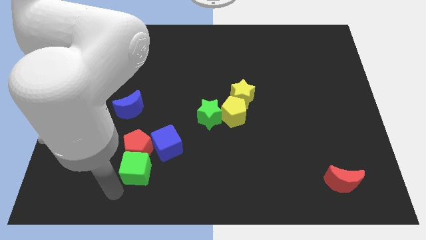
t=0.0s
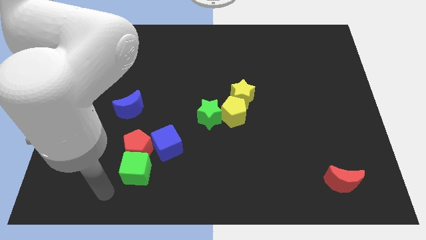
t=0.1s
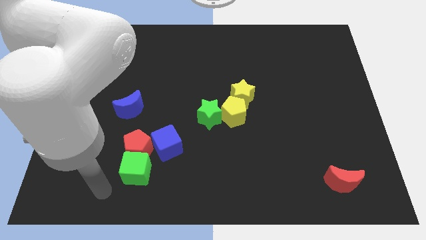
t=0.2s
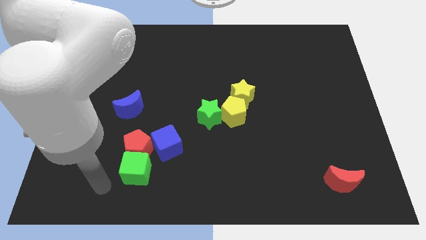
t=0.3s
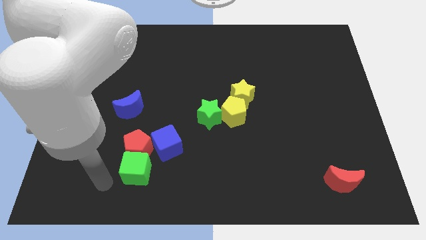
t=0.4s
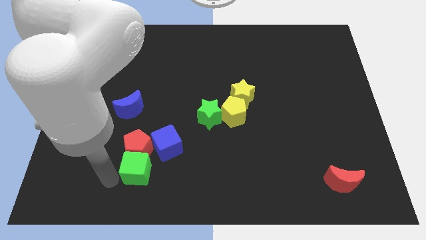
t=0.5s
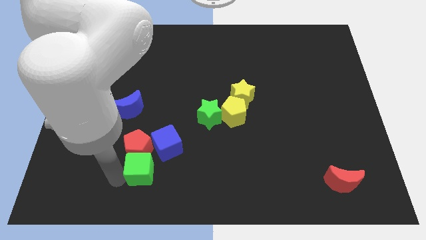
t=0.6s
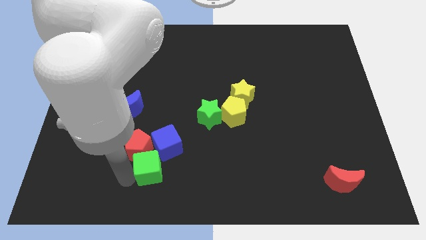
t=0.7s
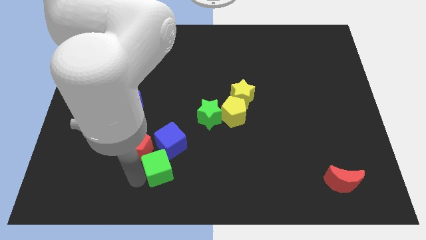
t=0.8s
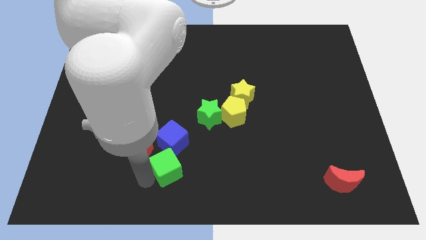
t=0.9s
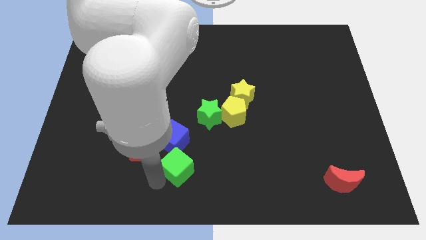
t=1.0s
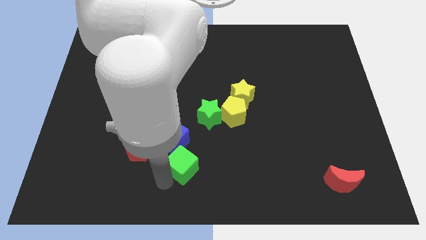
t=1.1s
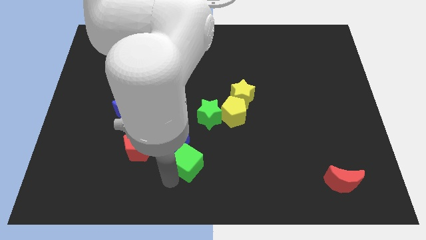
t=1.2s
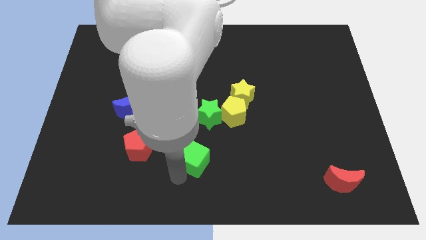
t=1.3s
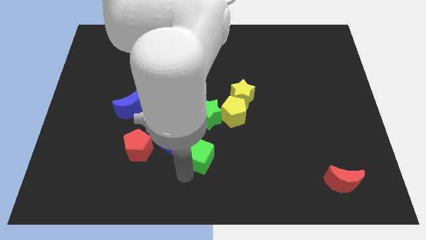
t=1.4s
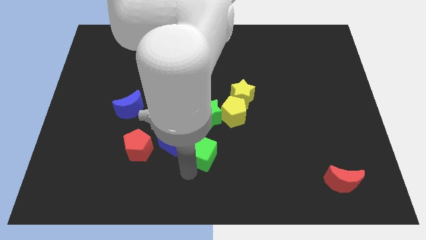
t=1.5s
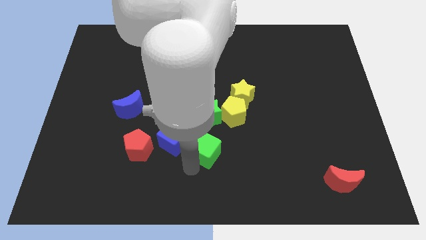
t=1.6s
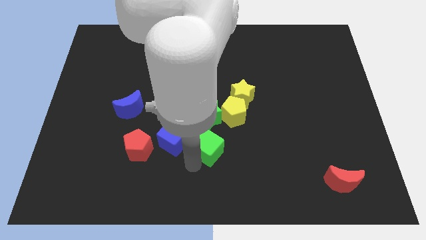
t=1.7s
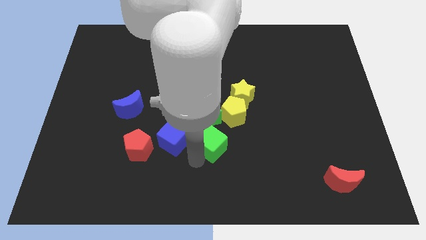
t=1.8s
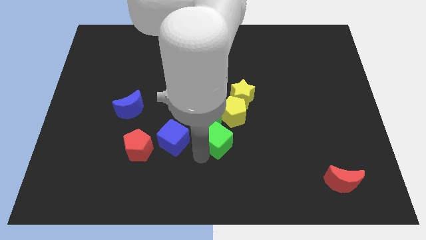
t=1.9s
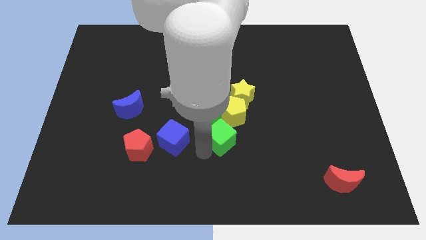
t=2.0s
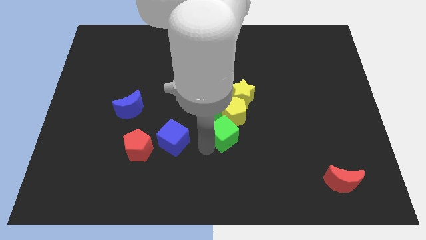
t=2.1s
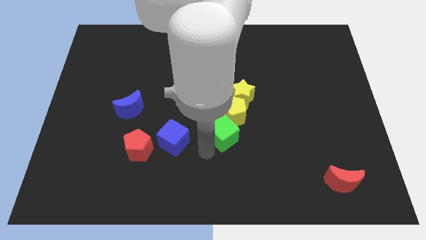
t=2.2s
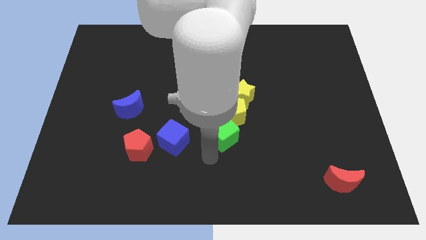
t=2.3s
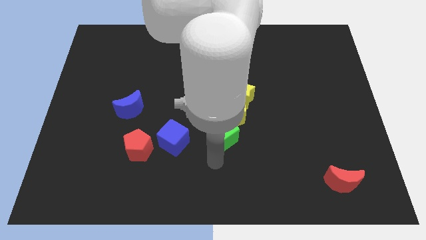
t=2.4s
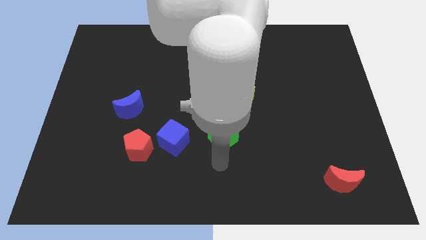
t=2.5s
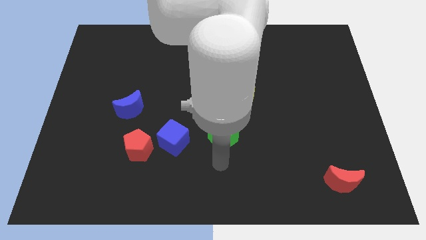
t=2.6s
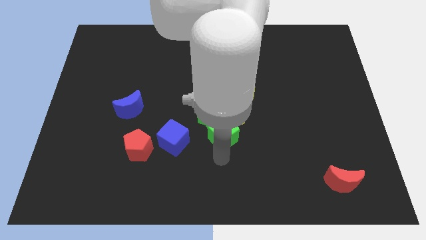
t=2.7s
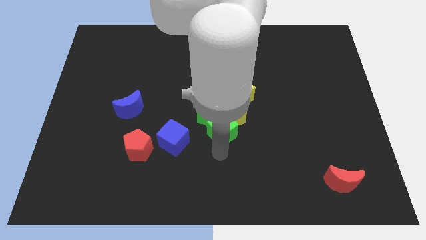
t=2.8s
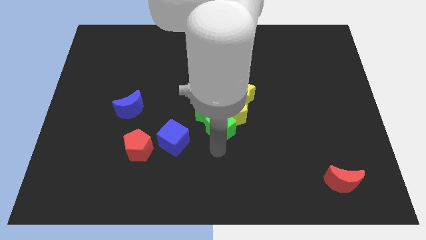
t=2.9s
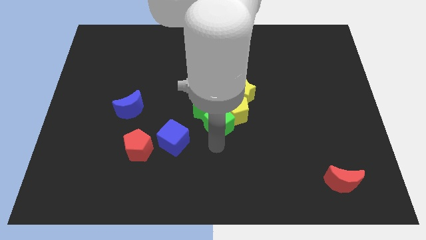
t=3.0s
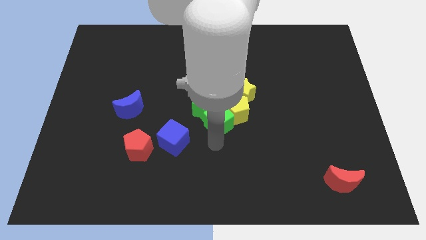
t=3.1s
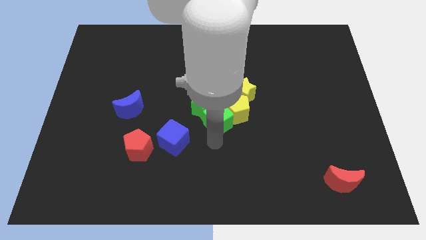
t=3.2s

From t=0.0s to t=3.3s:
separate the green cube from the red pentagon

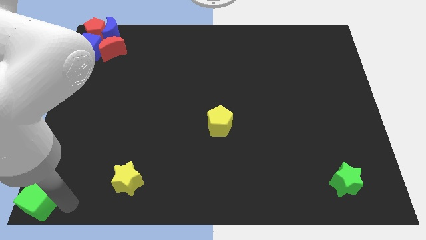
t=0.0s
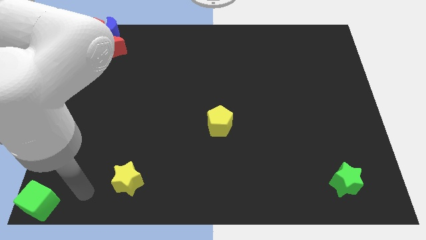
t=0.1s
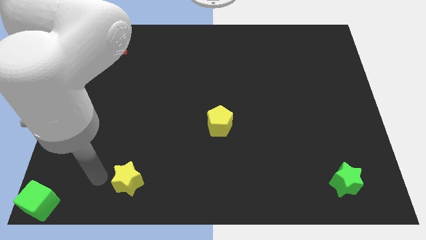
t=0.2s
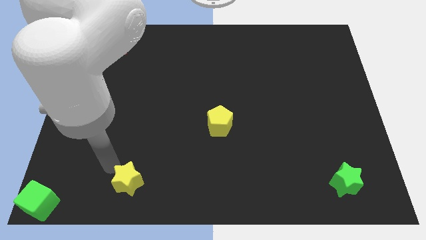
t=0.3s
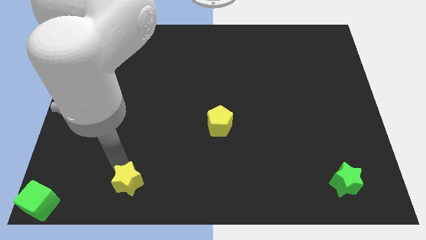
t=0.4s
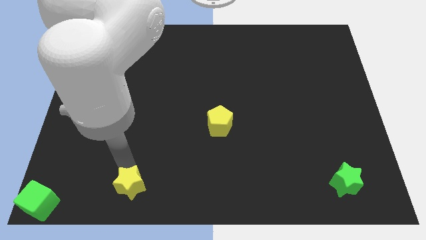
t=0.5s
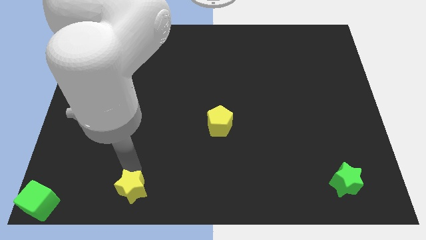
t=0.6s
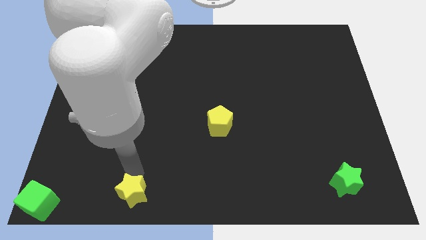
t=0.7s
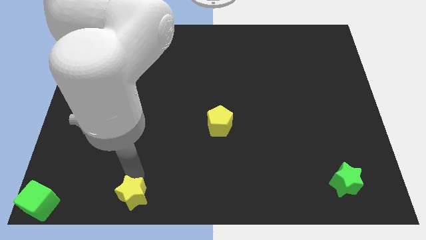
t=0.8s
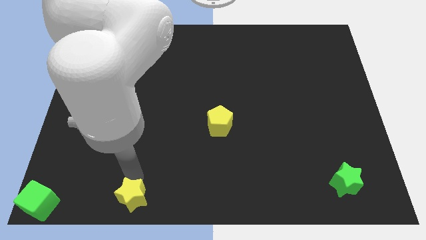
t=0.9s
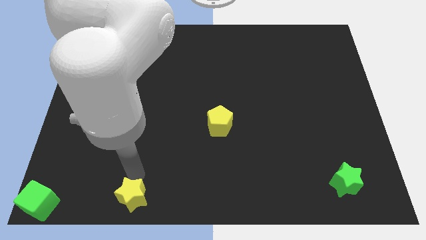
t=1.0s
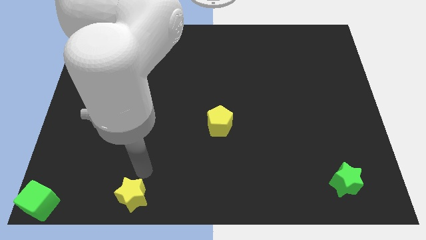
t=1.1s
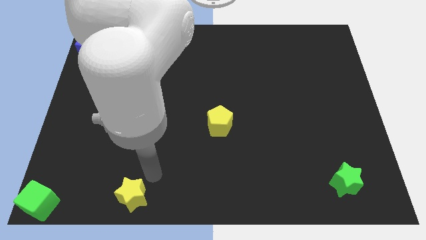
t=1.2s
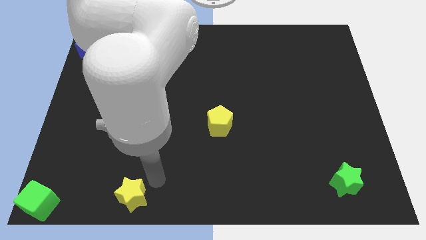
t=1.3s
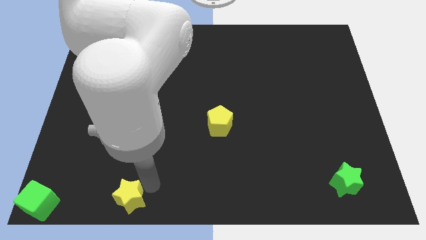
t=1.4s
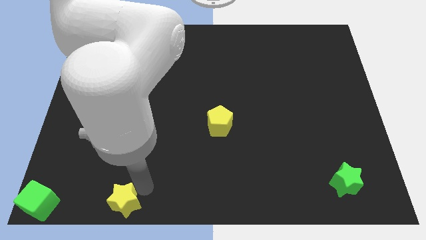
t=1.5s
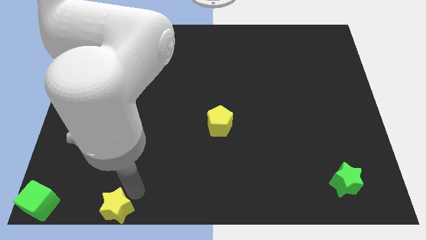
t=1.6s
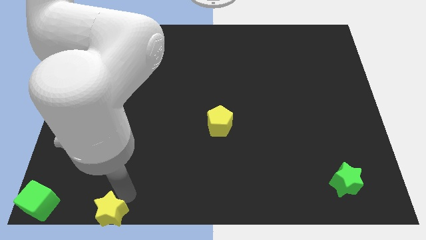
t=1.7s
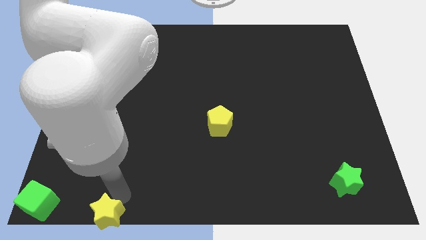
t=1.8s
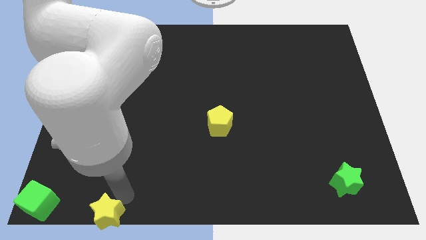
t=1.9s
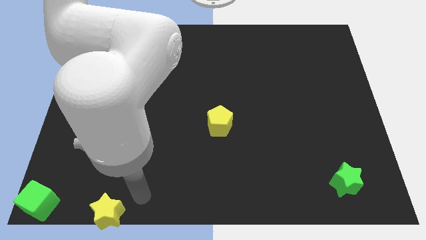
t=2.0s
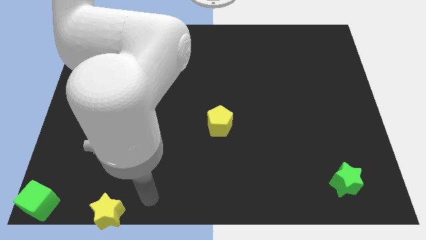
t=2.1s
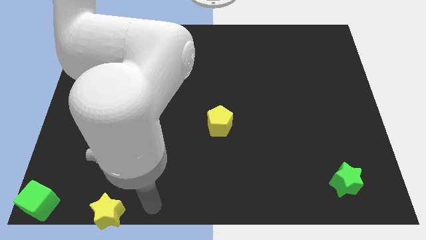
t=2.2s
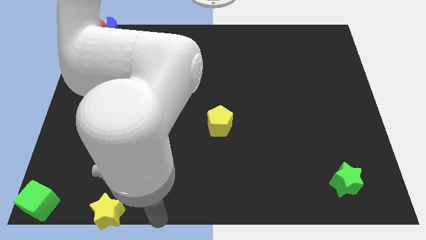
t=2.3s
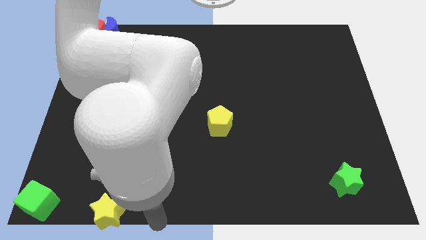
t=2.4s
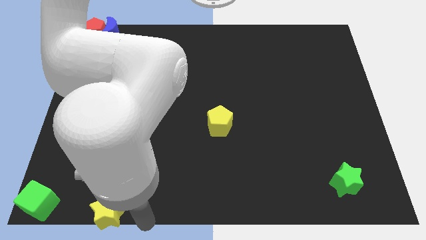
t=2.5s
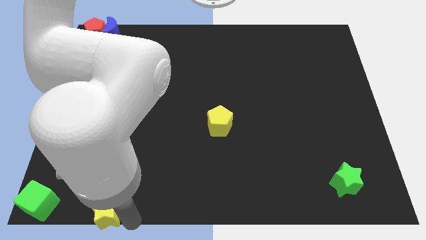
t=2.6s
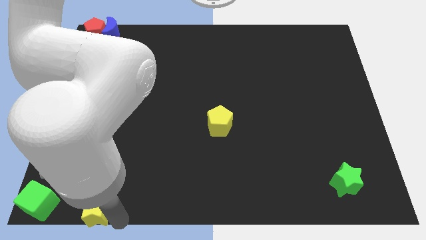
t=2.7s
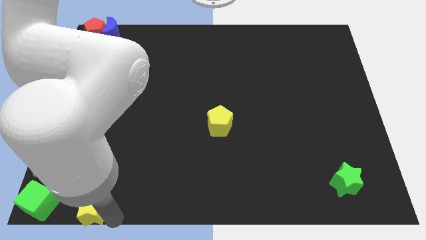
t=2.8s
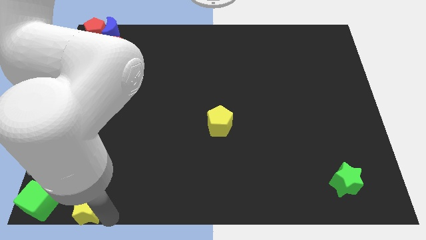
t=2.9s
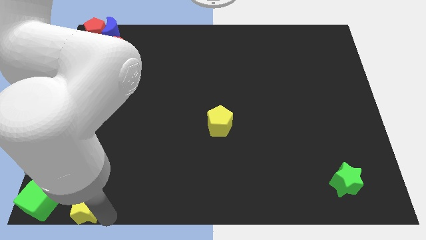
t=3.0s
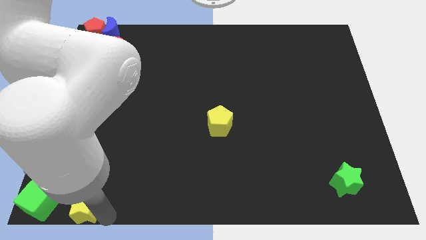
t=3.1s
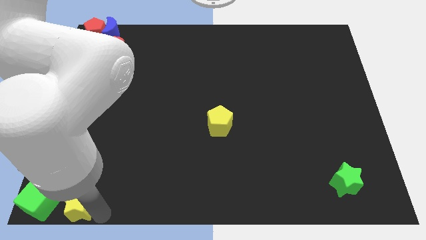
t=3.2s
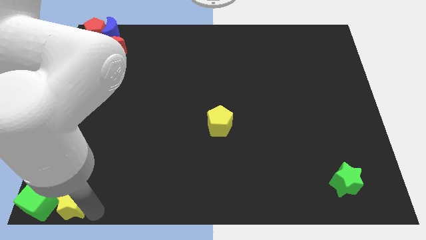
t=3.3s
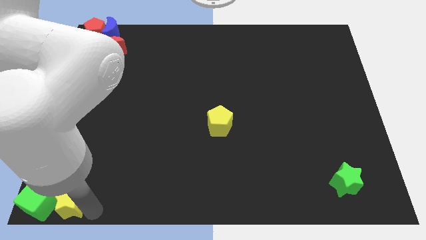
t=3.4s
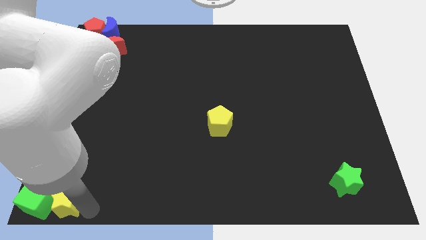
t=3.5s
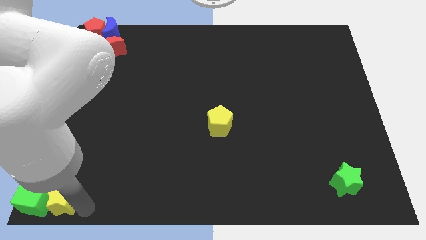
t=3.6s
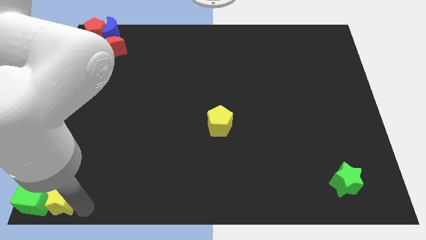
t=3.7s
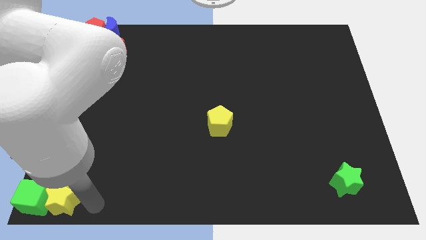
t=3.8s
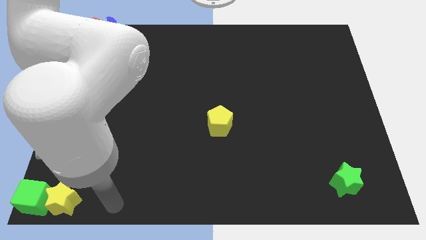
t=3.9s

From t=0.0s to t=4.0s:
push the yellow star into the right side of the green cube

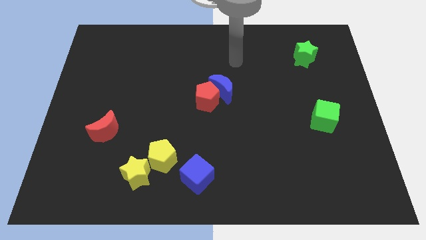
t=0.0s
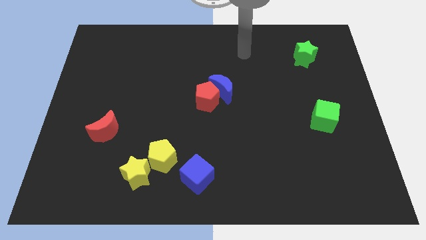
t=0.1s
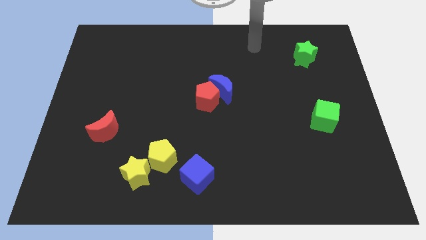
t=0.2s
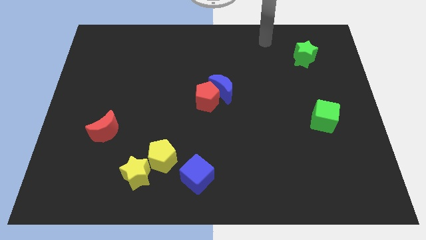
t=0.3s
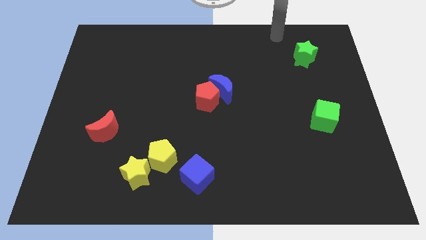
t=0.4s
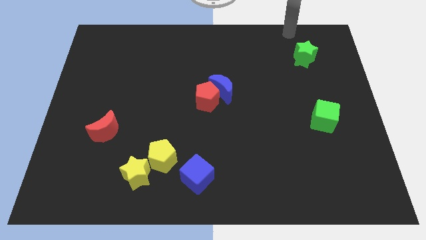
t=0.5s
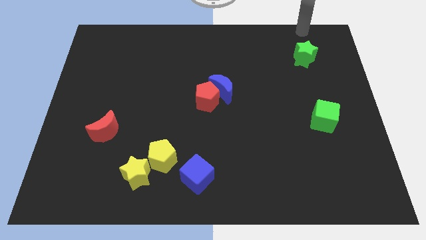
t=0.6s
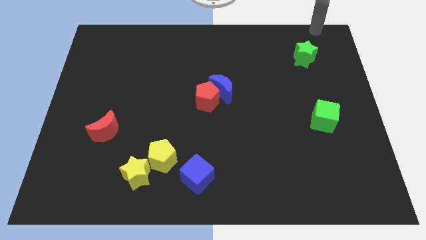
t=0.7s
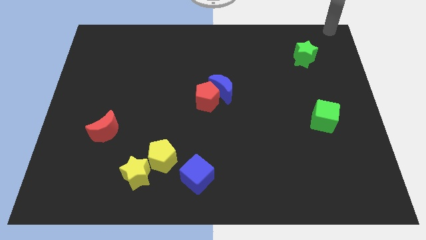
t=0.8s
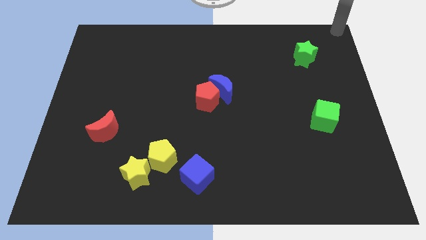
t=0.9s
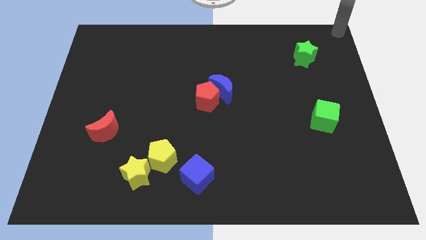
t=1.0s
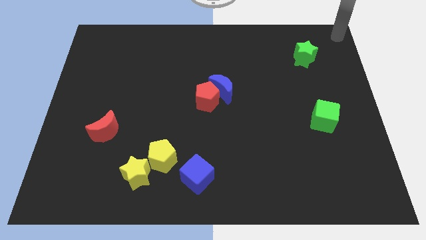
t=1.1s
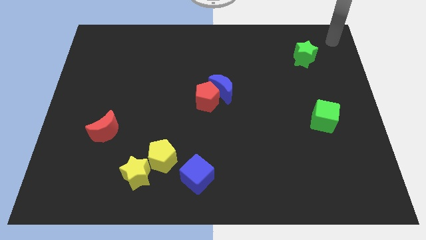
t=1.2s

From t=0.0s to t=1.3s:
point your arm at the top right corner of the board

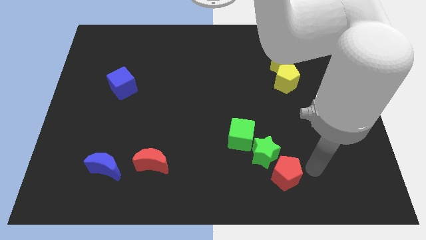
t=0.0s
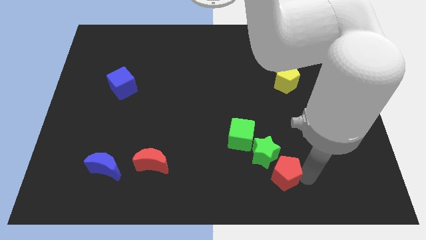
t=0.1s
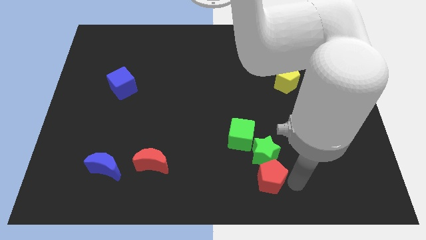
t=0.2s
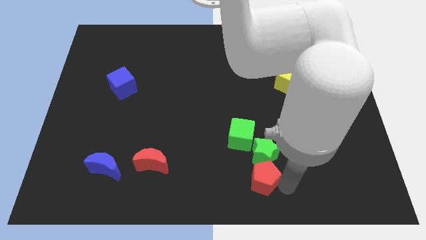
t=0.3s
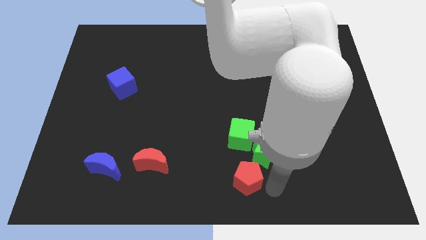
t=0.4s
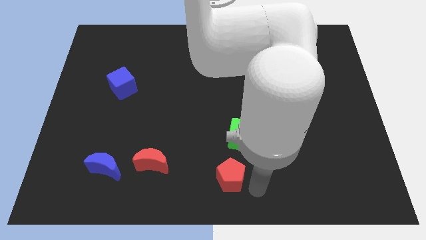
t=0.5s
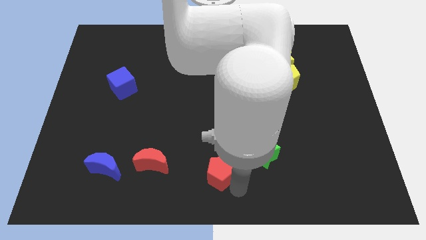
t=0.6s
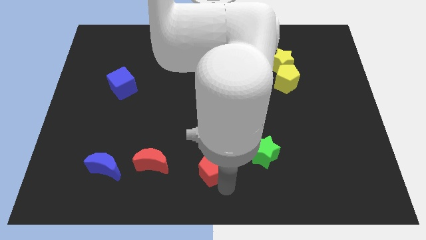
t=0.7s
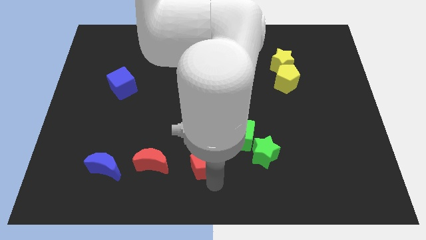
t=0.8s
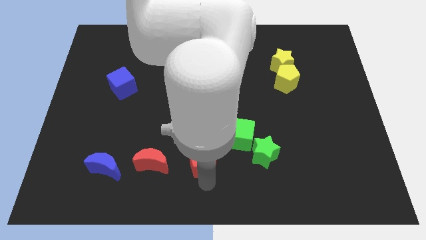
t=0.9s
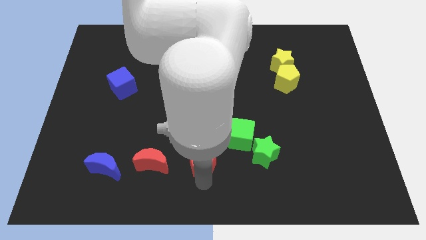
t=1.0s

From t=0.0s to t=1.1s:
separate red pentagon from green star
